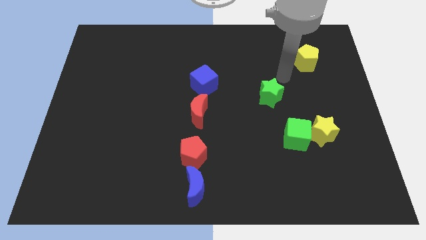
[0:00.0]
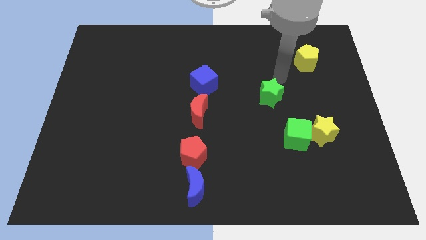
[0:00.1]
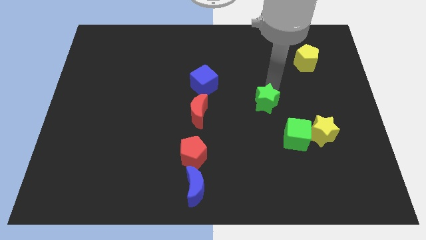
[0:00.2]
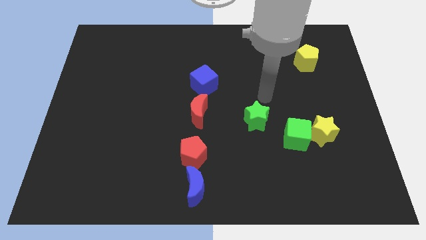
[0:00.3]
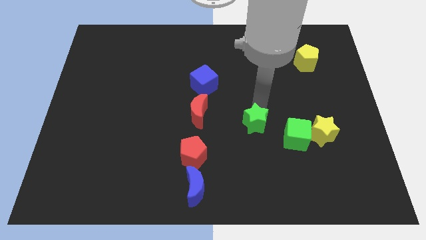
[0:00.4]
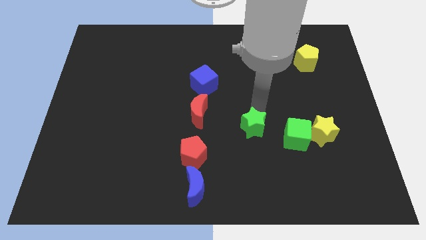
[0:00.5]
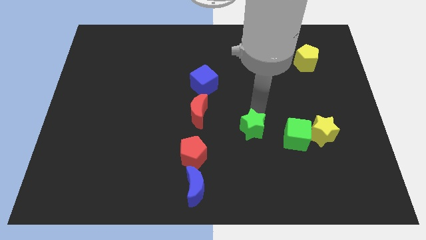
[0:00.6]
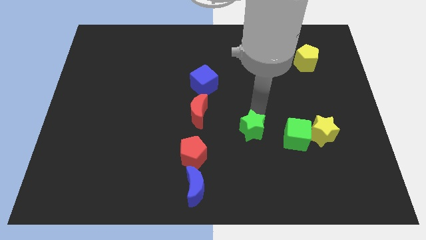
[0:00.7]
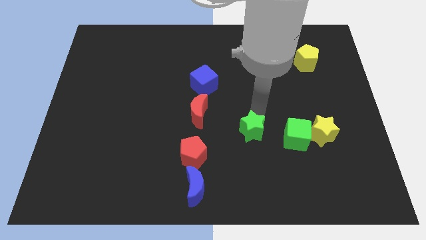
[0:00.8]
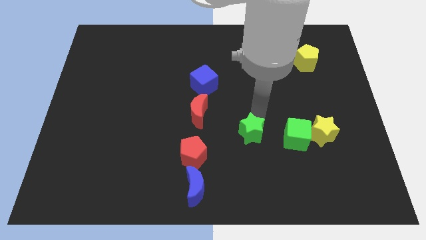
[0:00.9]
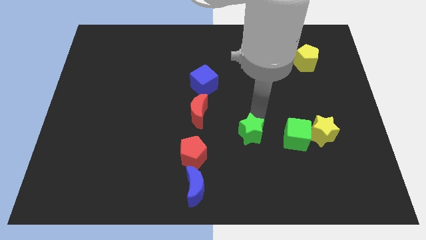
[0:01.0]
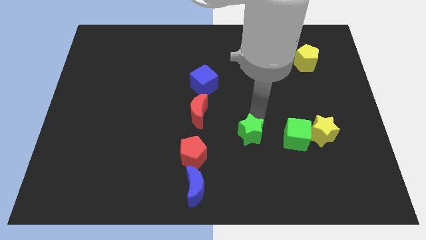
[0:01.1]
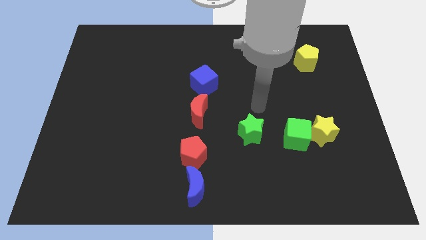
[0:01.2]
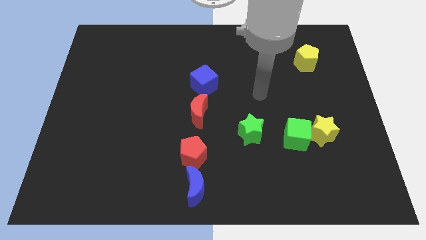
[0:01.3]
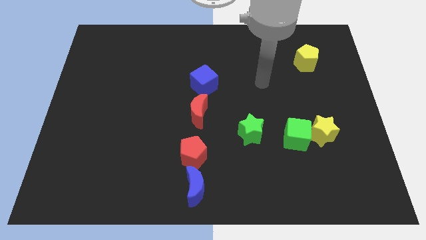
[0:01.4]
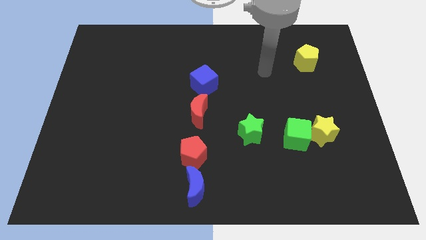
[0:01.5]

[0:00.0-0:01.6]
drag the green star diagonally to yellow pentagon

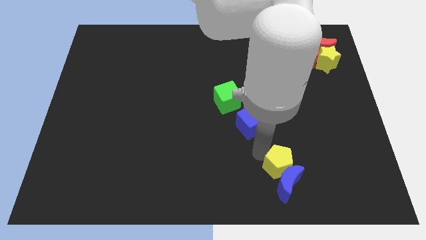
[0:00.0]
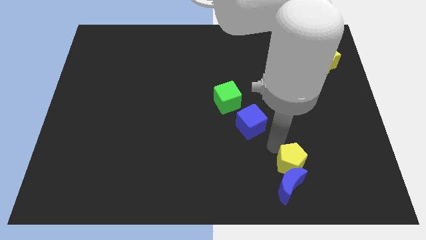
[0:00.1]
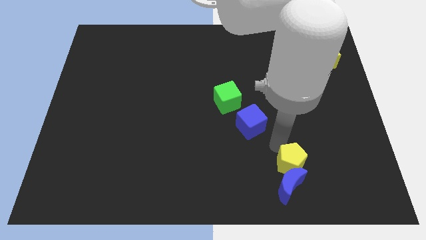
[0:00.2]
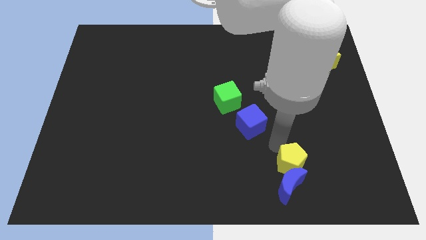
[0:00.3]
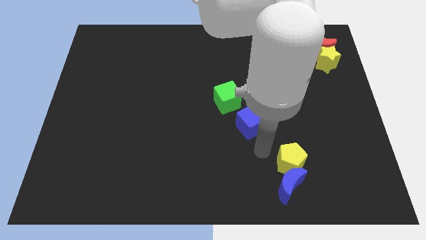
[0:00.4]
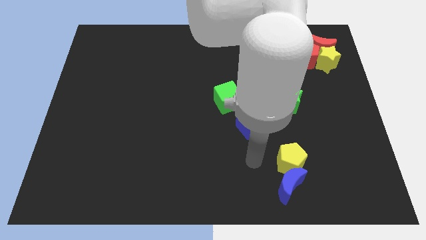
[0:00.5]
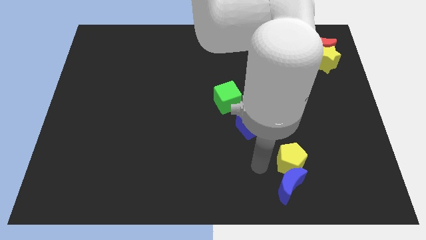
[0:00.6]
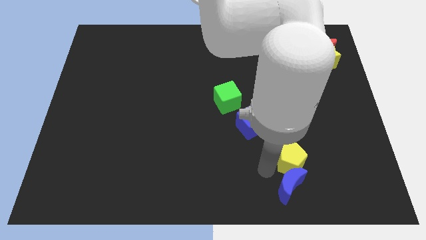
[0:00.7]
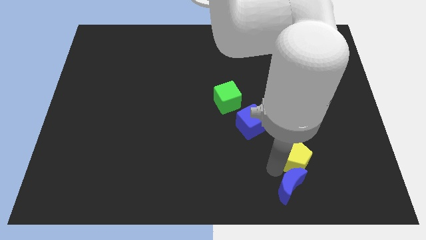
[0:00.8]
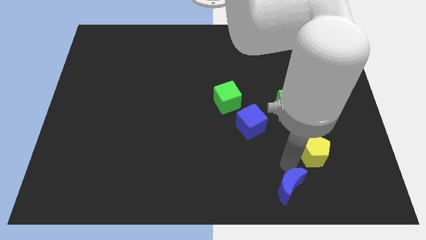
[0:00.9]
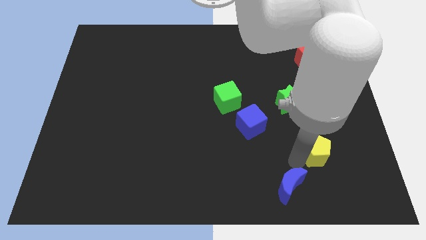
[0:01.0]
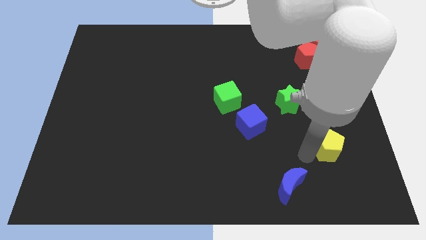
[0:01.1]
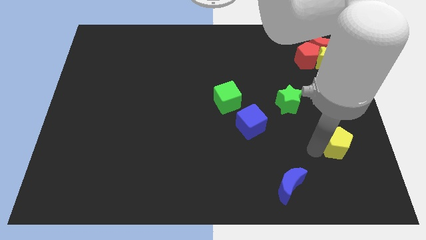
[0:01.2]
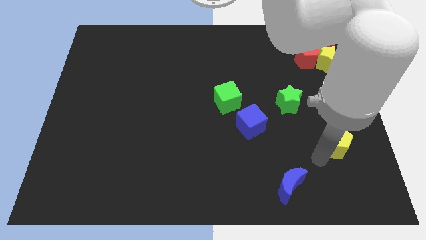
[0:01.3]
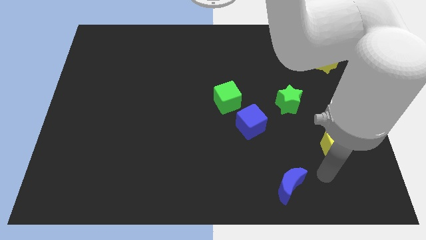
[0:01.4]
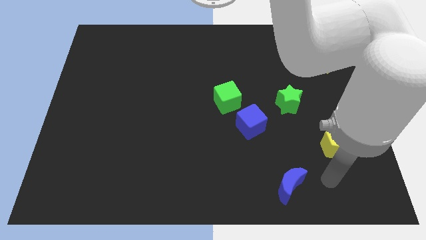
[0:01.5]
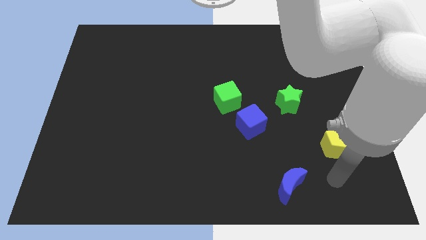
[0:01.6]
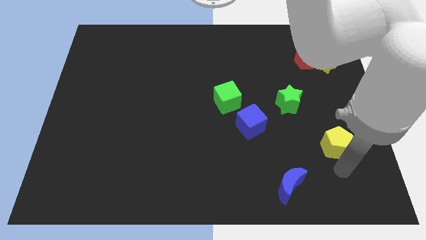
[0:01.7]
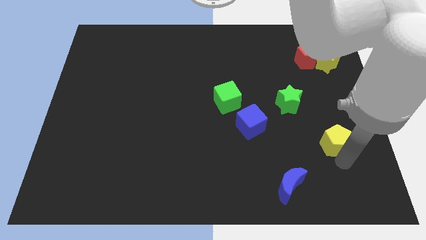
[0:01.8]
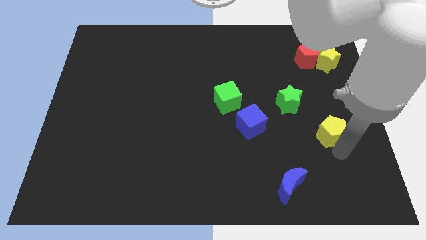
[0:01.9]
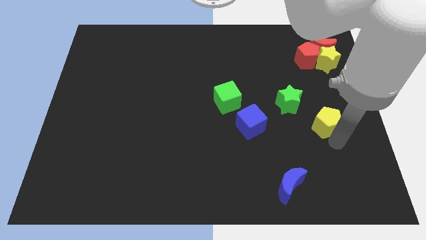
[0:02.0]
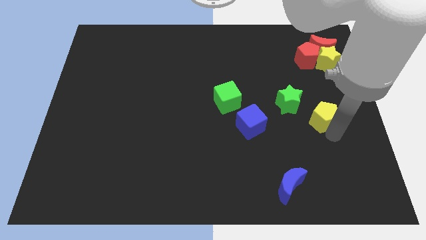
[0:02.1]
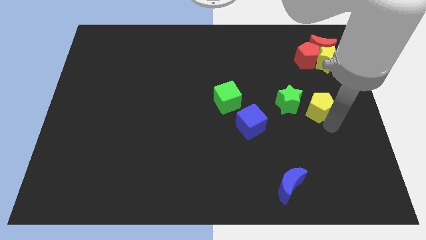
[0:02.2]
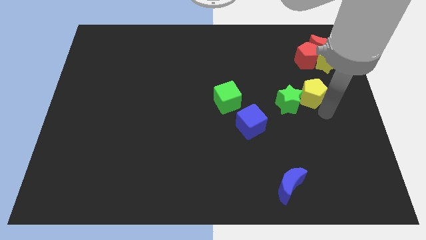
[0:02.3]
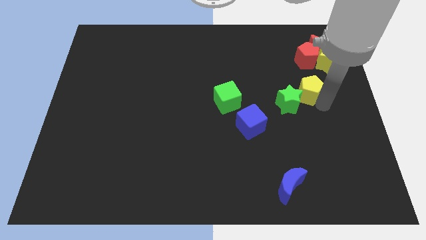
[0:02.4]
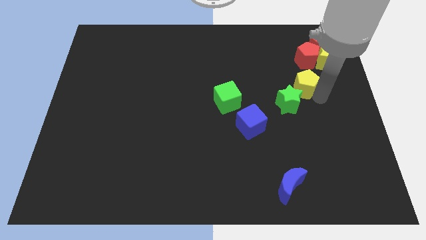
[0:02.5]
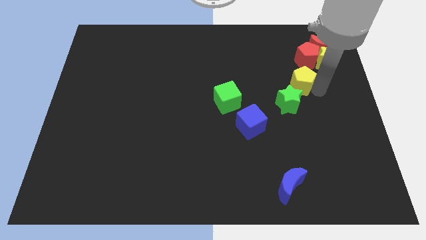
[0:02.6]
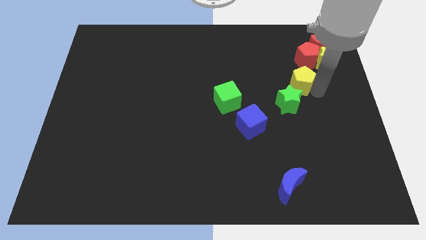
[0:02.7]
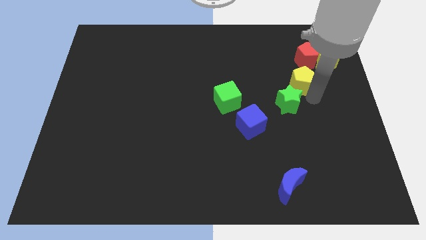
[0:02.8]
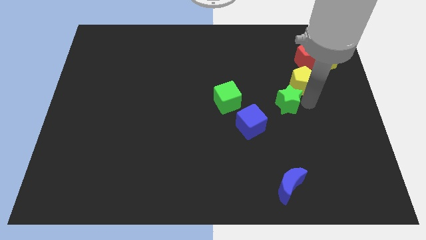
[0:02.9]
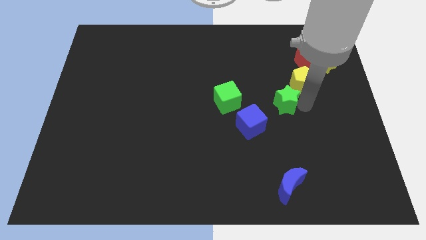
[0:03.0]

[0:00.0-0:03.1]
add yellow pentagon to the top right of green star

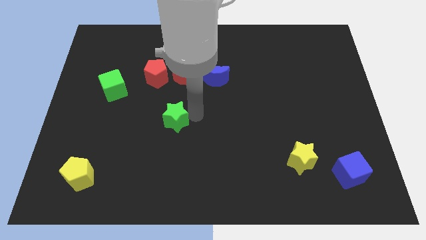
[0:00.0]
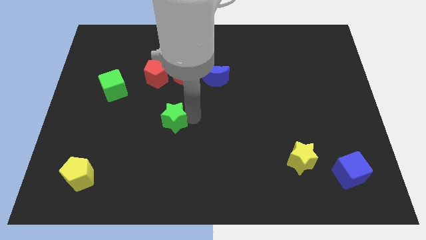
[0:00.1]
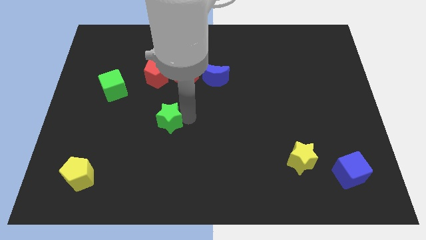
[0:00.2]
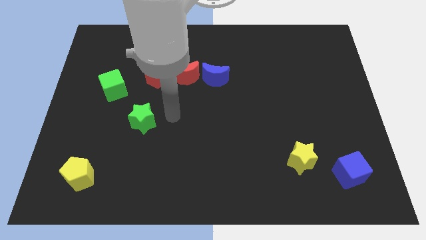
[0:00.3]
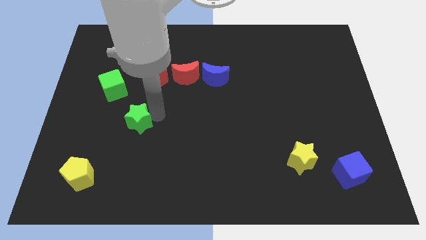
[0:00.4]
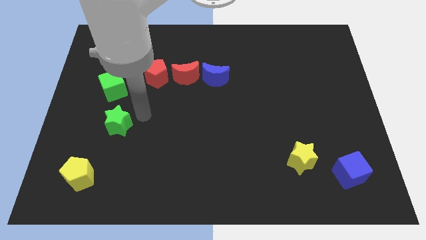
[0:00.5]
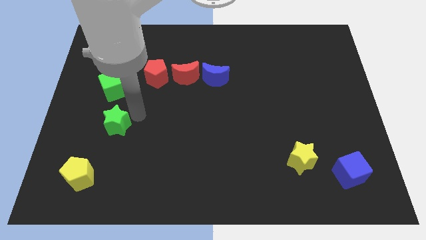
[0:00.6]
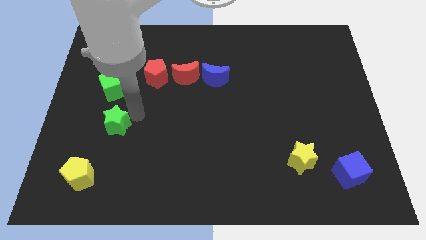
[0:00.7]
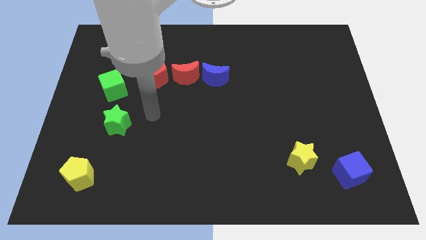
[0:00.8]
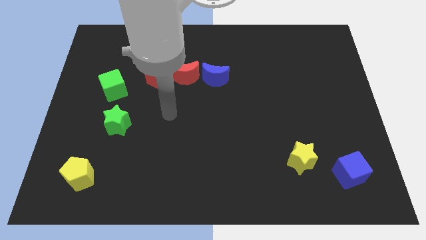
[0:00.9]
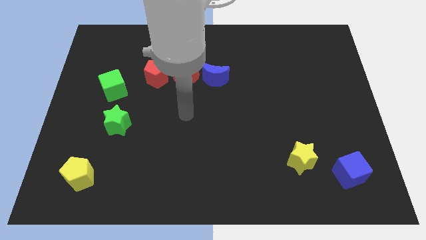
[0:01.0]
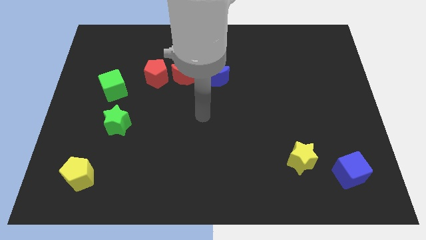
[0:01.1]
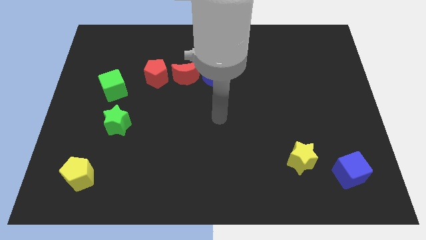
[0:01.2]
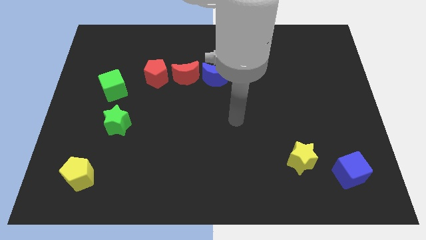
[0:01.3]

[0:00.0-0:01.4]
place green star to the bottom of the green cube

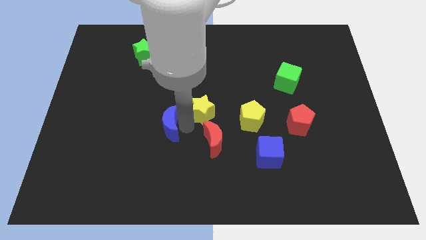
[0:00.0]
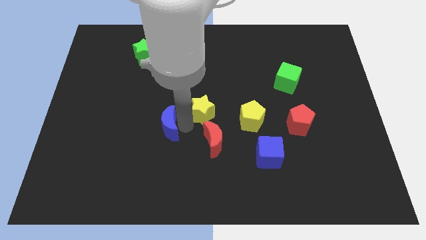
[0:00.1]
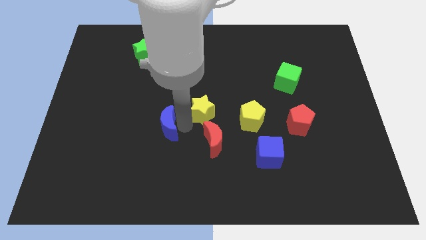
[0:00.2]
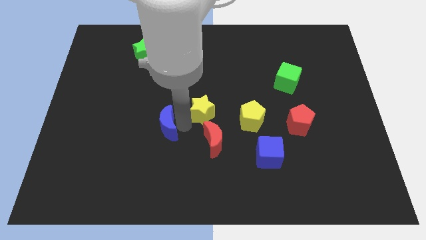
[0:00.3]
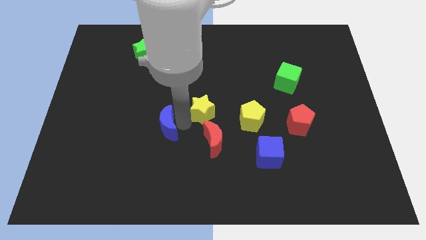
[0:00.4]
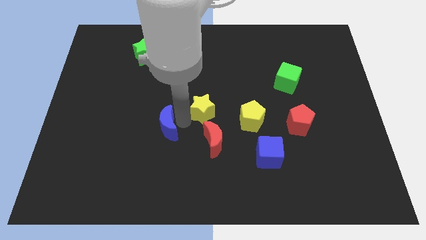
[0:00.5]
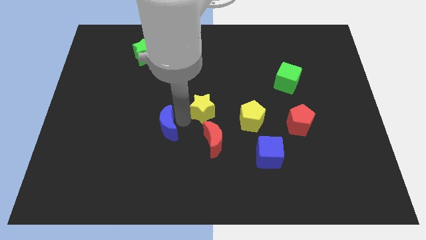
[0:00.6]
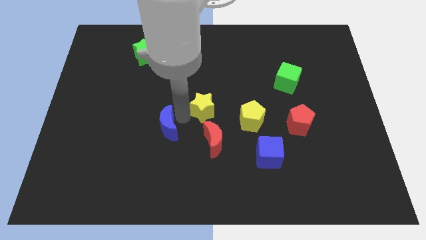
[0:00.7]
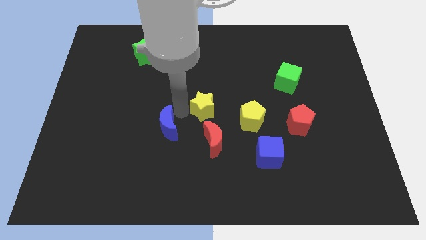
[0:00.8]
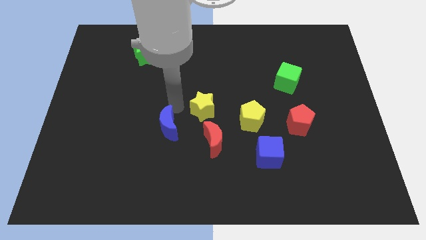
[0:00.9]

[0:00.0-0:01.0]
separate yellow star from blue moon

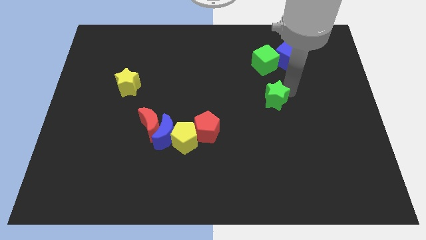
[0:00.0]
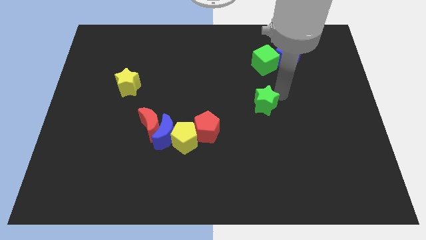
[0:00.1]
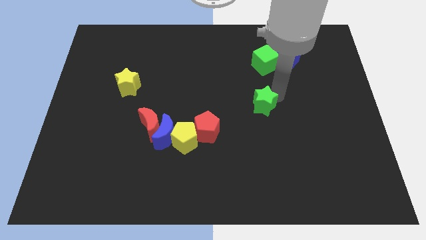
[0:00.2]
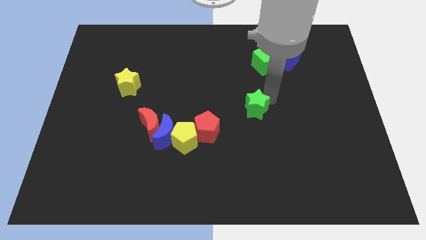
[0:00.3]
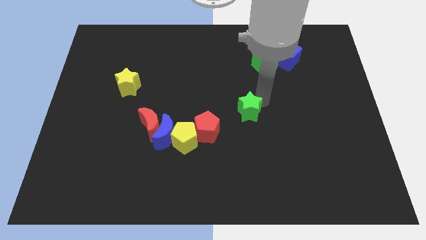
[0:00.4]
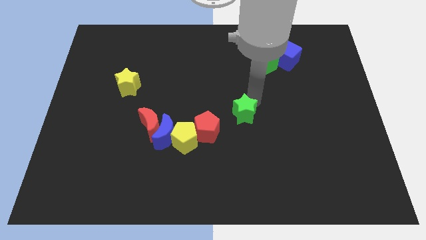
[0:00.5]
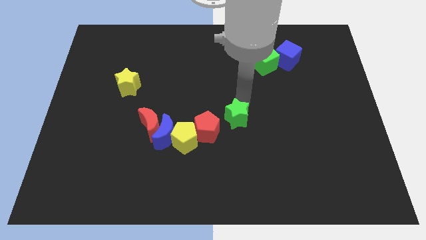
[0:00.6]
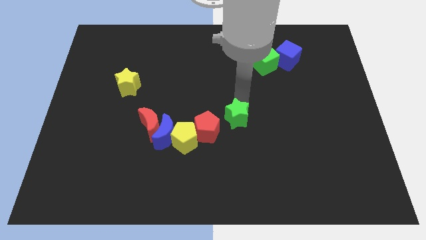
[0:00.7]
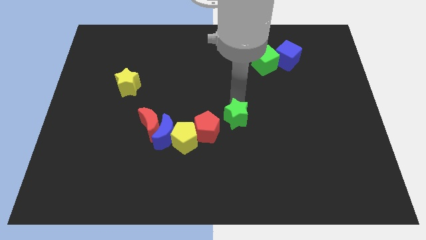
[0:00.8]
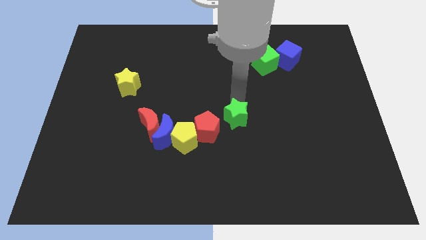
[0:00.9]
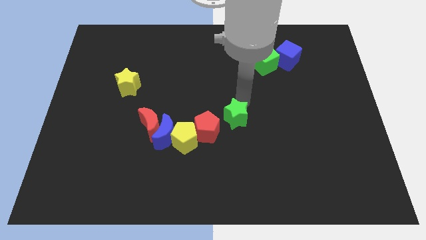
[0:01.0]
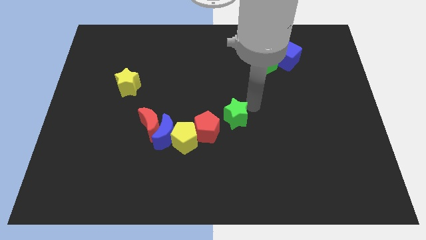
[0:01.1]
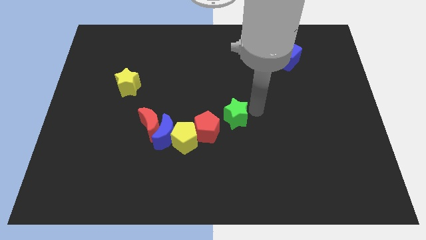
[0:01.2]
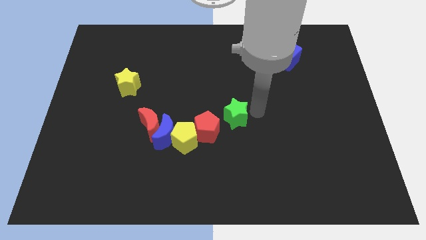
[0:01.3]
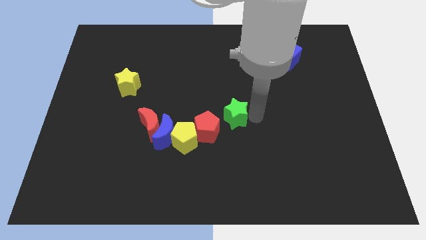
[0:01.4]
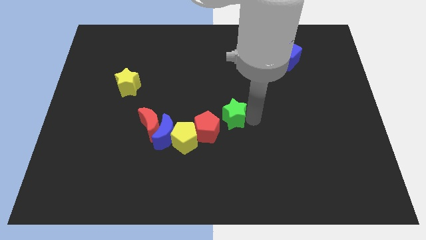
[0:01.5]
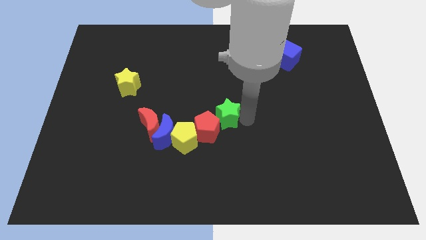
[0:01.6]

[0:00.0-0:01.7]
place green star to the top right of red pentagon

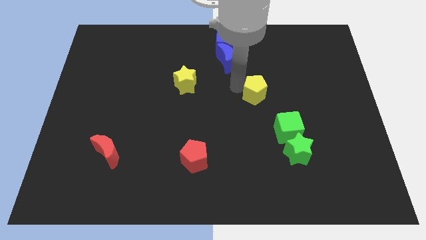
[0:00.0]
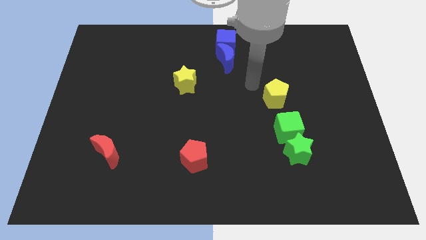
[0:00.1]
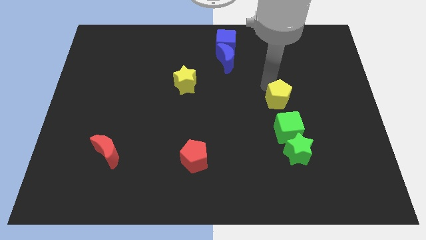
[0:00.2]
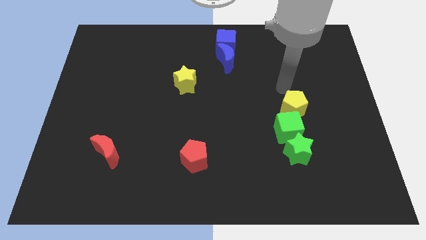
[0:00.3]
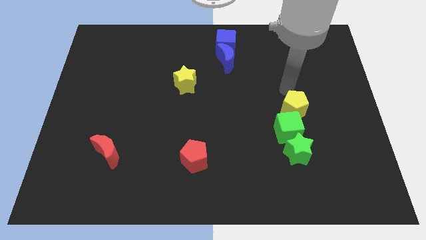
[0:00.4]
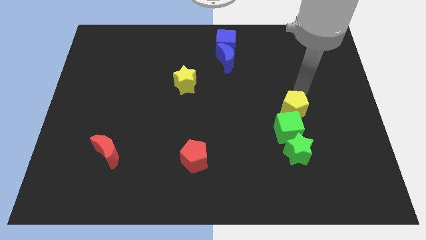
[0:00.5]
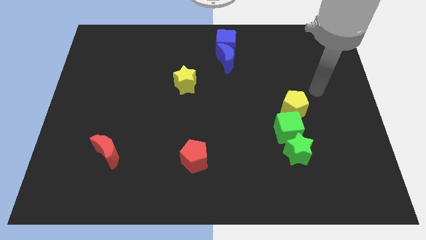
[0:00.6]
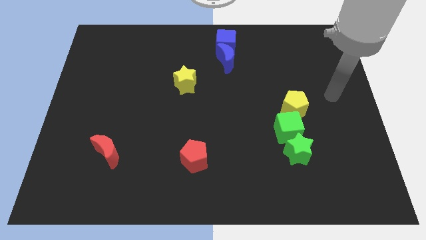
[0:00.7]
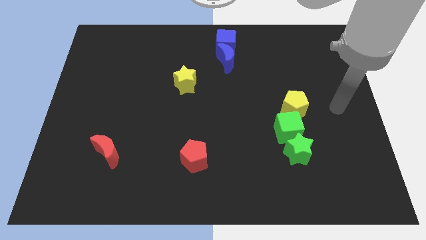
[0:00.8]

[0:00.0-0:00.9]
place the yellow pentagon above the green cube
